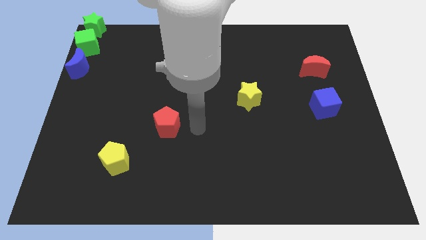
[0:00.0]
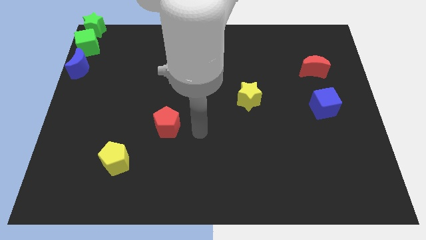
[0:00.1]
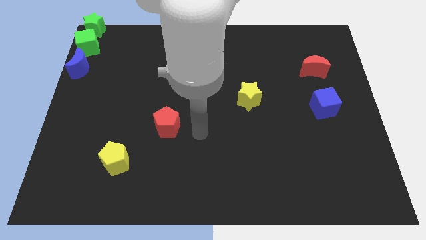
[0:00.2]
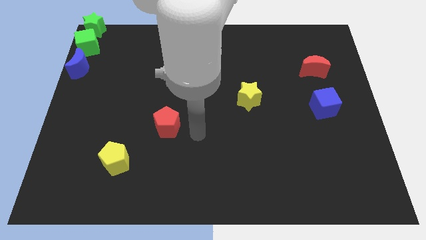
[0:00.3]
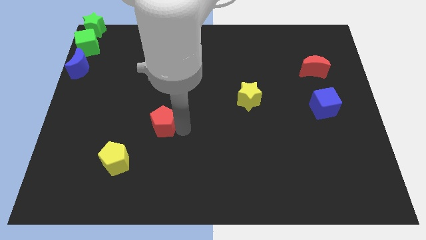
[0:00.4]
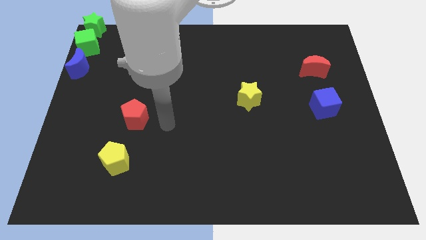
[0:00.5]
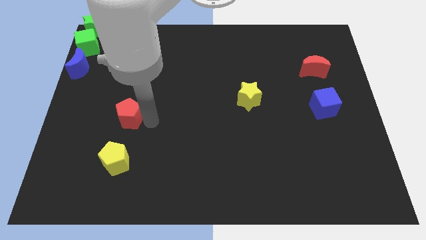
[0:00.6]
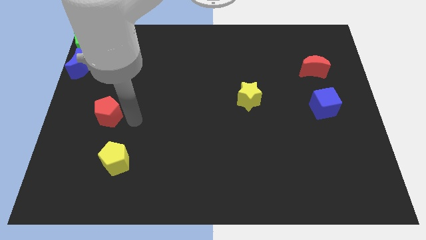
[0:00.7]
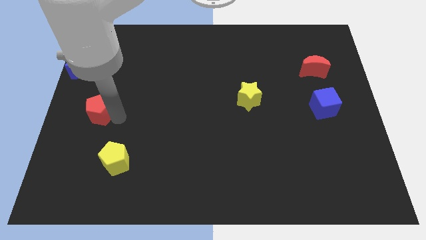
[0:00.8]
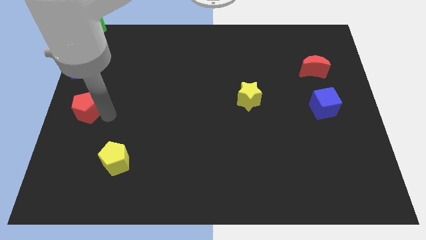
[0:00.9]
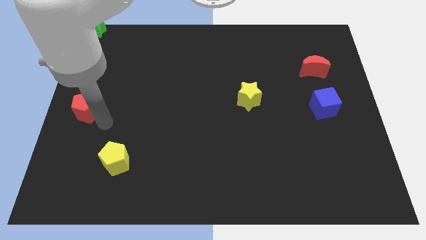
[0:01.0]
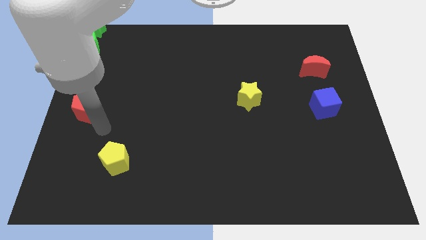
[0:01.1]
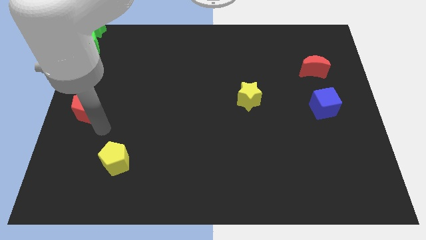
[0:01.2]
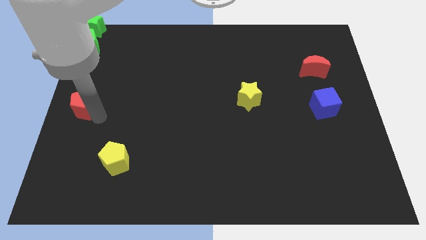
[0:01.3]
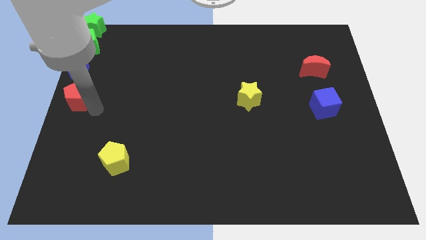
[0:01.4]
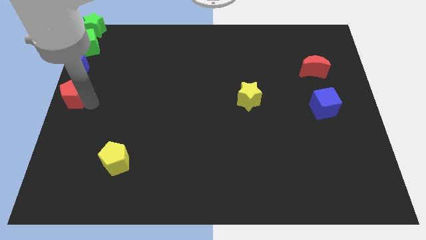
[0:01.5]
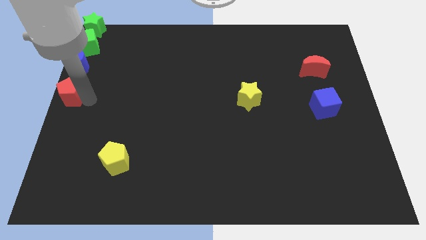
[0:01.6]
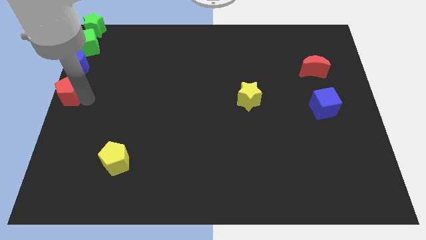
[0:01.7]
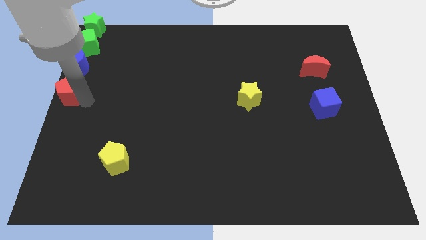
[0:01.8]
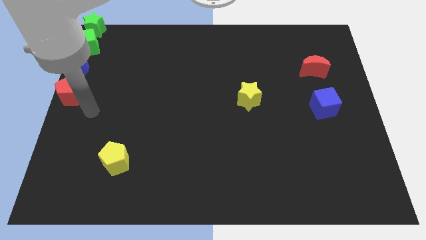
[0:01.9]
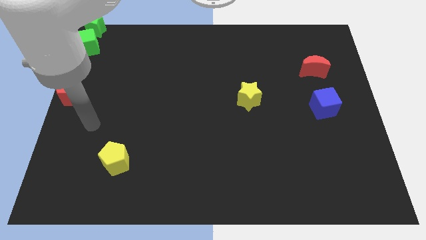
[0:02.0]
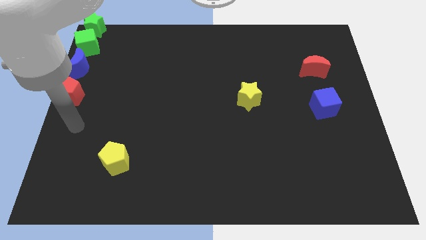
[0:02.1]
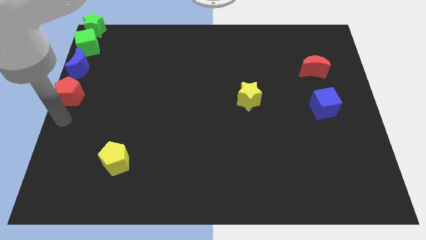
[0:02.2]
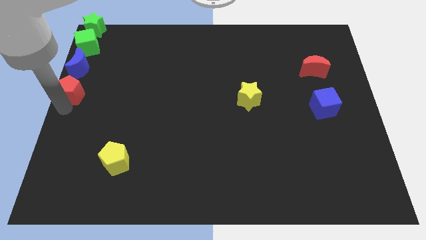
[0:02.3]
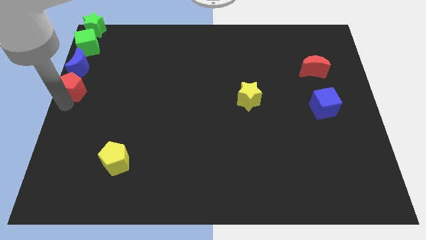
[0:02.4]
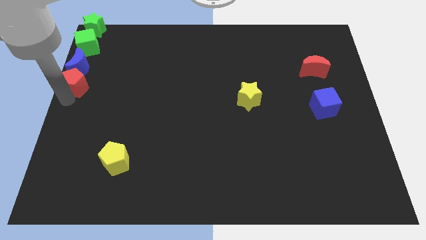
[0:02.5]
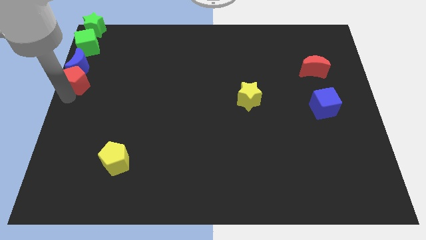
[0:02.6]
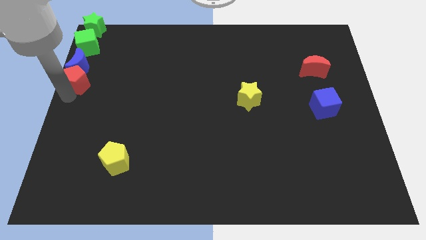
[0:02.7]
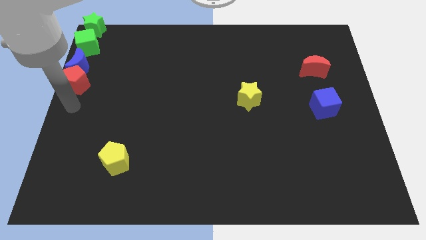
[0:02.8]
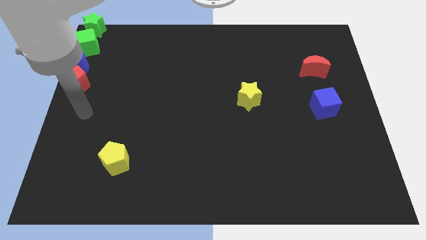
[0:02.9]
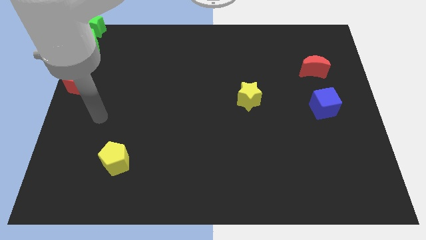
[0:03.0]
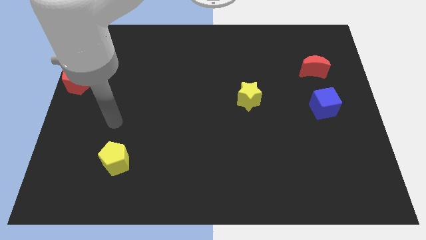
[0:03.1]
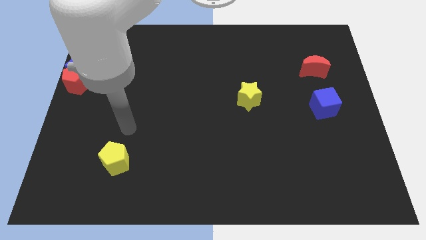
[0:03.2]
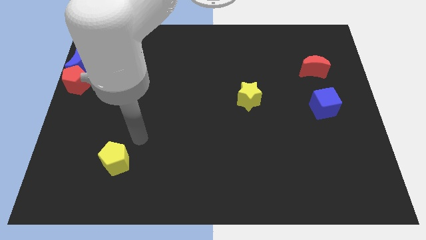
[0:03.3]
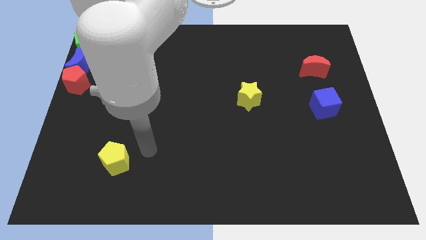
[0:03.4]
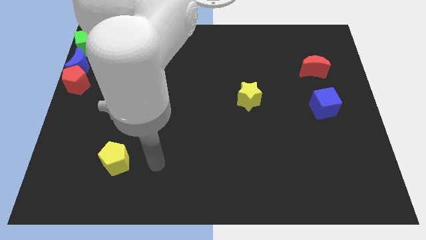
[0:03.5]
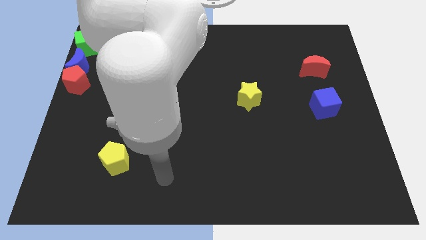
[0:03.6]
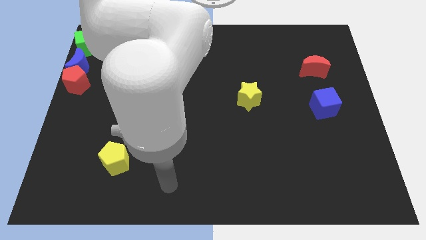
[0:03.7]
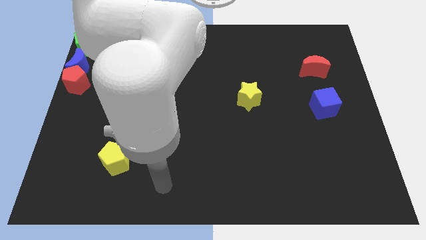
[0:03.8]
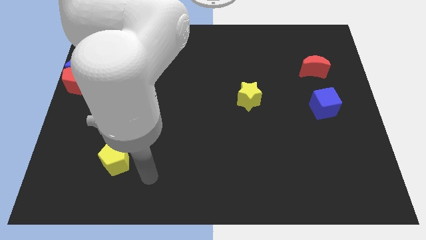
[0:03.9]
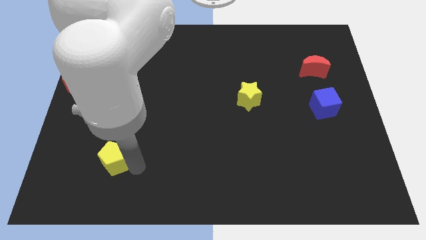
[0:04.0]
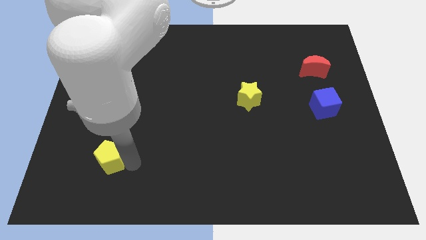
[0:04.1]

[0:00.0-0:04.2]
place the arm right to the yellow pentagon

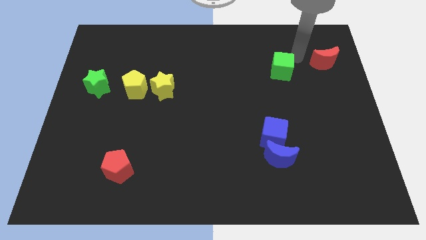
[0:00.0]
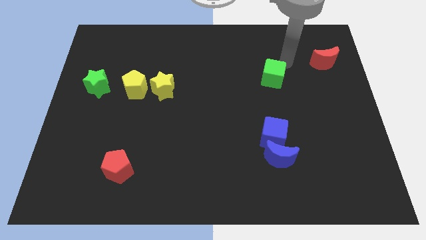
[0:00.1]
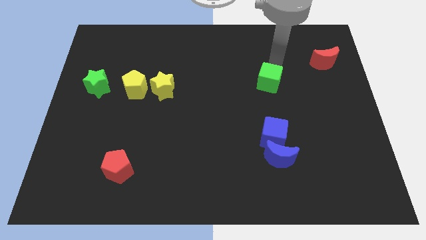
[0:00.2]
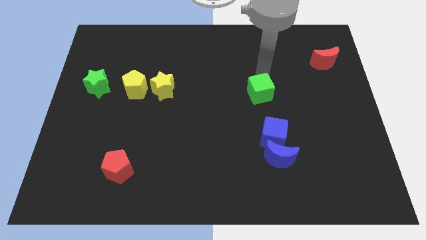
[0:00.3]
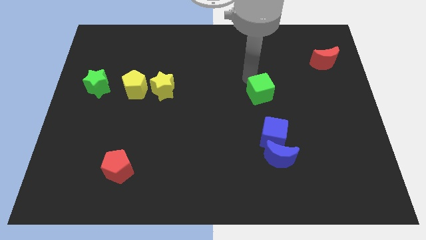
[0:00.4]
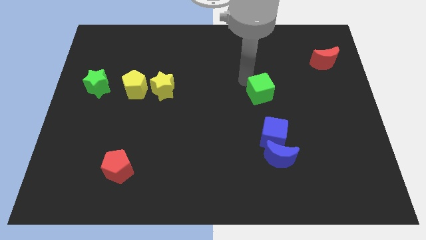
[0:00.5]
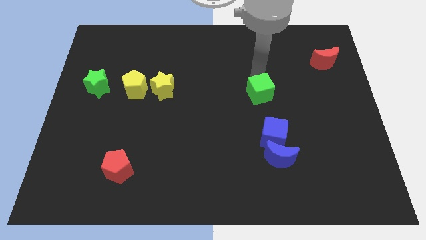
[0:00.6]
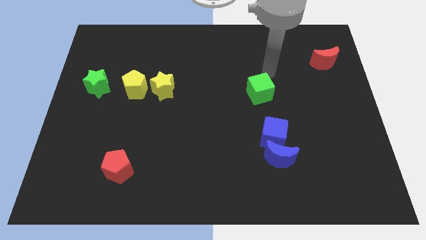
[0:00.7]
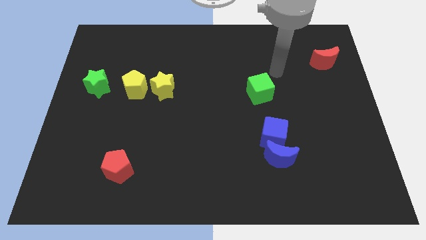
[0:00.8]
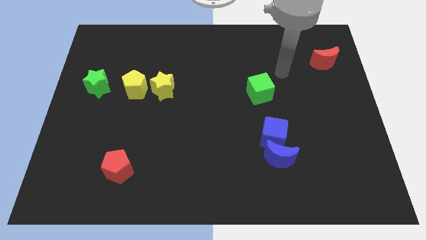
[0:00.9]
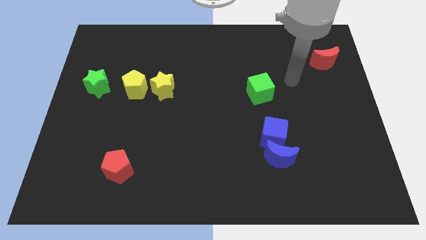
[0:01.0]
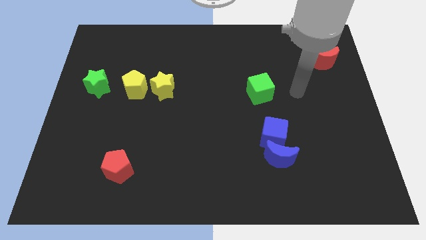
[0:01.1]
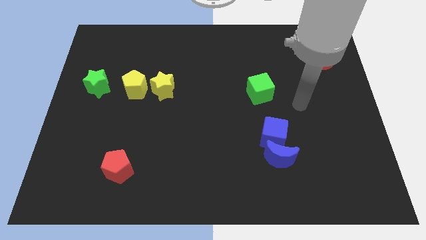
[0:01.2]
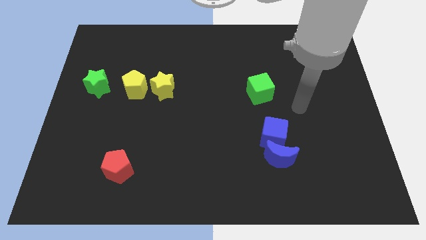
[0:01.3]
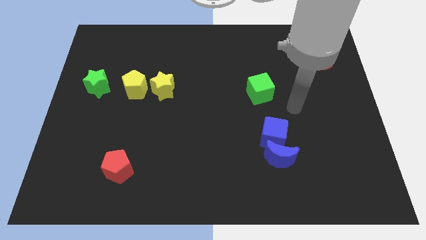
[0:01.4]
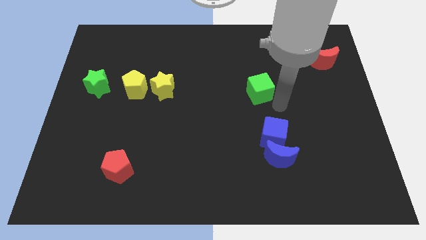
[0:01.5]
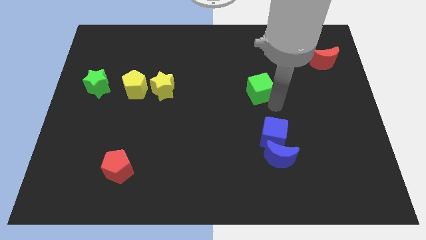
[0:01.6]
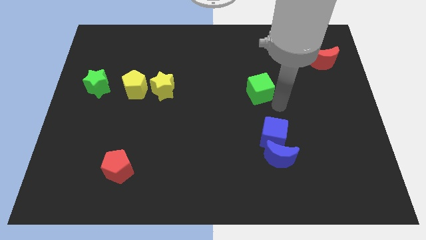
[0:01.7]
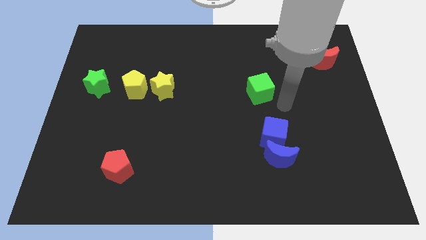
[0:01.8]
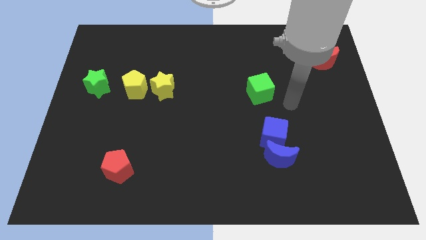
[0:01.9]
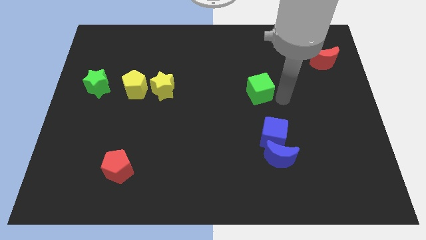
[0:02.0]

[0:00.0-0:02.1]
place the green cube on top left of the blue cube

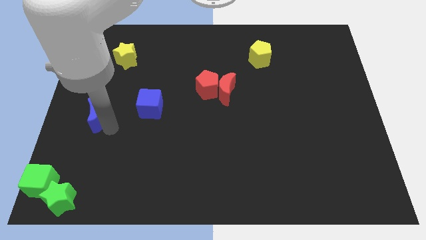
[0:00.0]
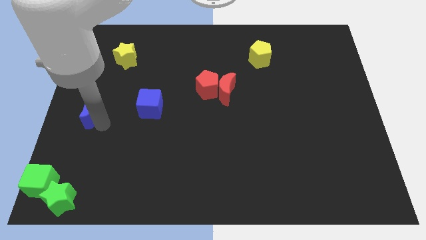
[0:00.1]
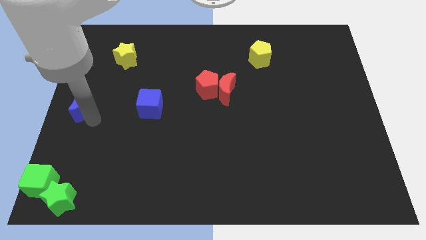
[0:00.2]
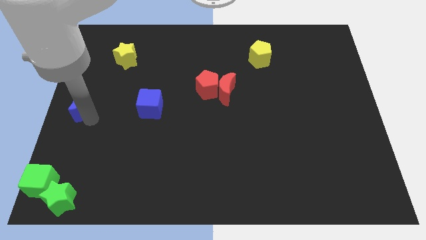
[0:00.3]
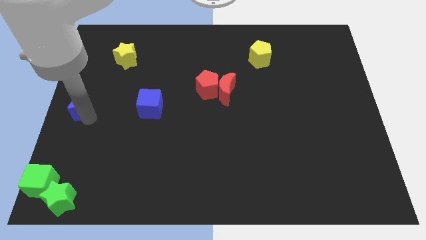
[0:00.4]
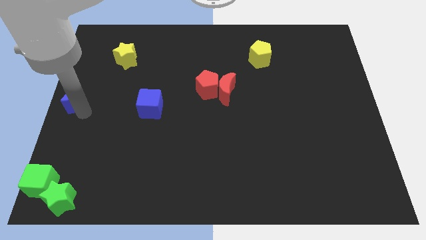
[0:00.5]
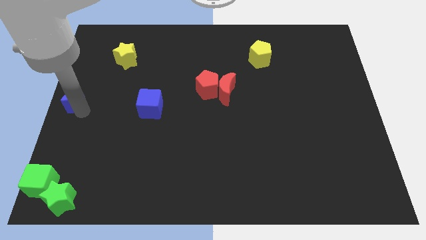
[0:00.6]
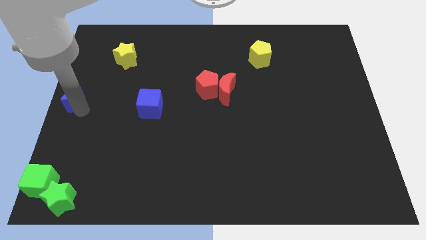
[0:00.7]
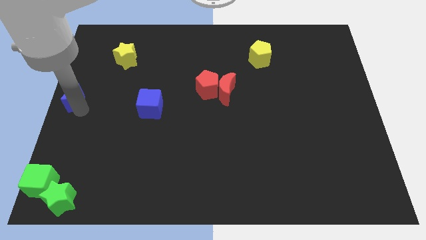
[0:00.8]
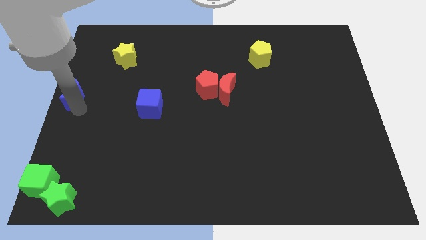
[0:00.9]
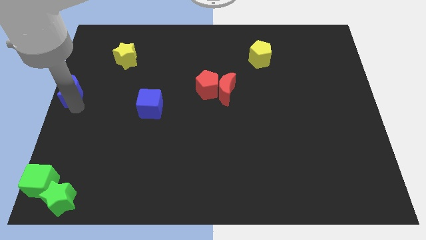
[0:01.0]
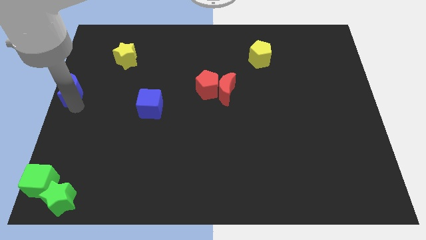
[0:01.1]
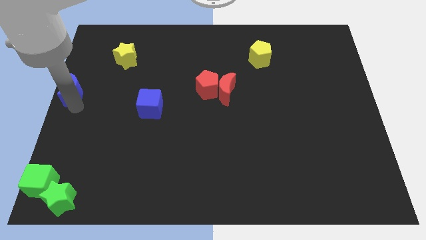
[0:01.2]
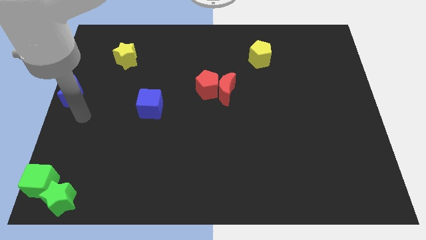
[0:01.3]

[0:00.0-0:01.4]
push blue half moon to the left center

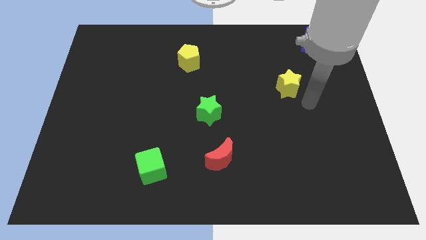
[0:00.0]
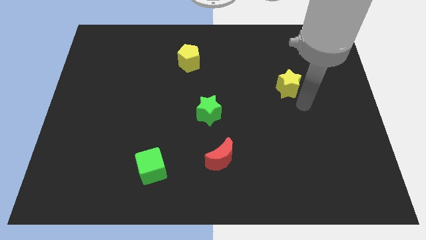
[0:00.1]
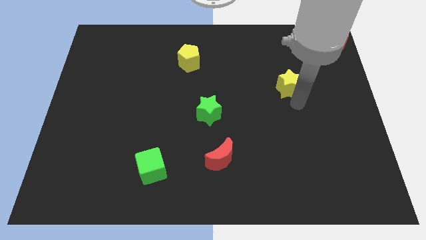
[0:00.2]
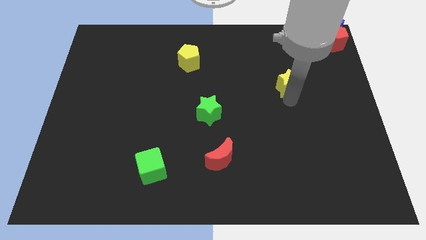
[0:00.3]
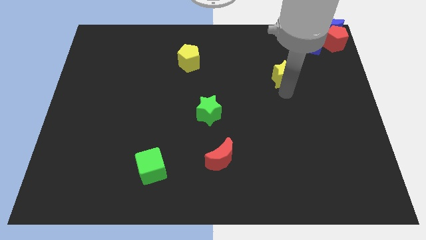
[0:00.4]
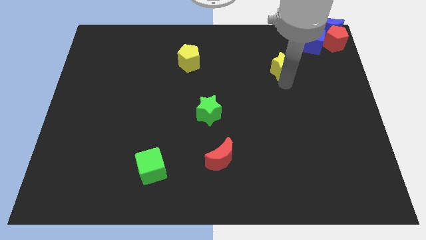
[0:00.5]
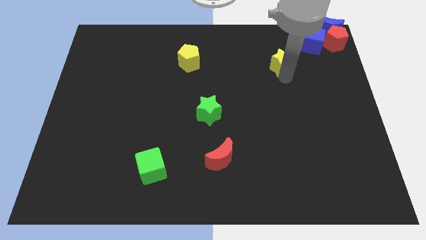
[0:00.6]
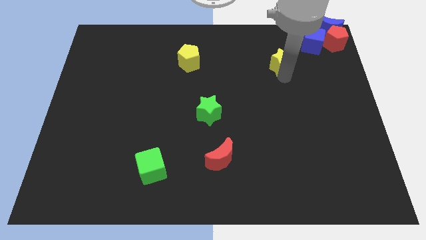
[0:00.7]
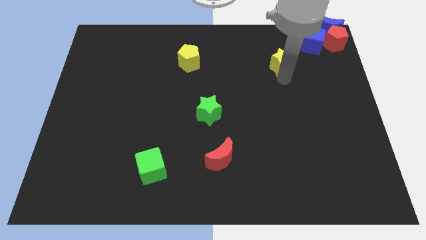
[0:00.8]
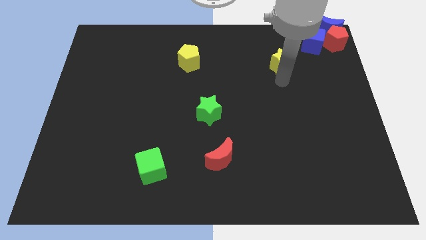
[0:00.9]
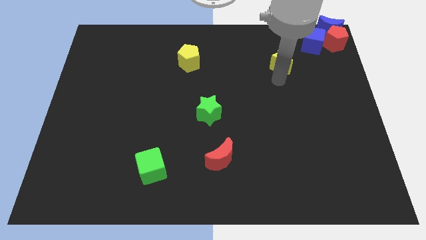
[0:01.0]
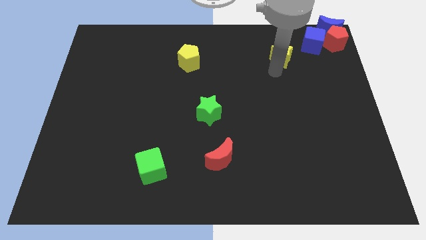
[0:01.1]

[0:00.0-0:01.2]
move yellow star to the blue cube
